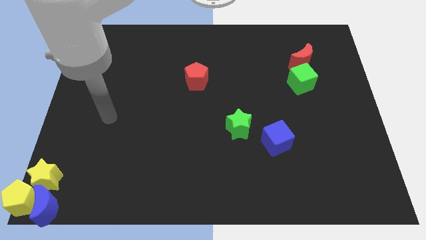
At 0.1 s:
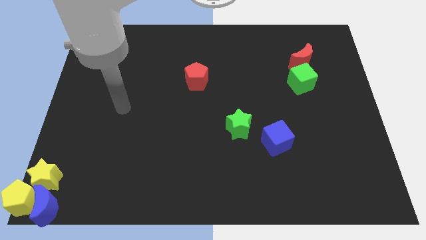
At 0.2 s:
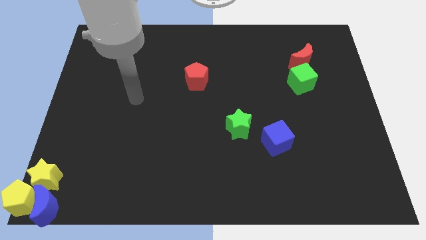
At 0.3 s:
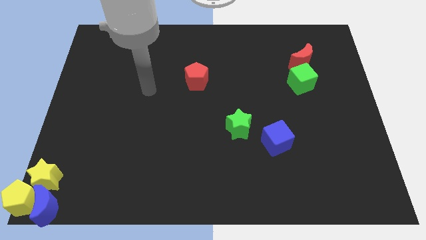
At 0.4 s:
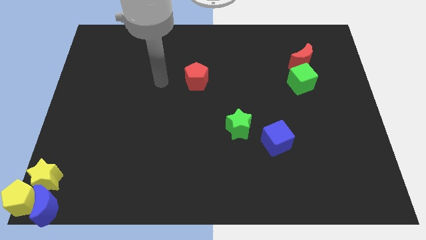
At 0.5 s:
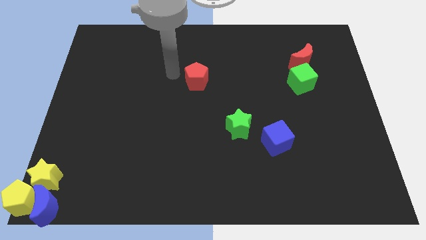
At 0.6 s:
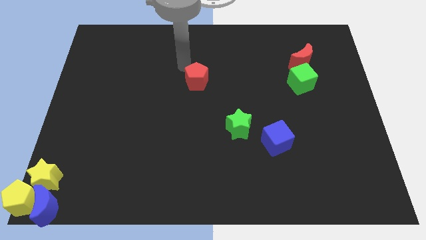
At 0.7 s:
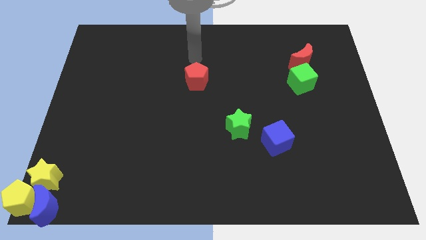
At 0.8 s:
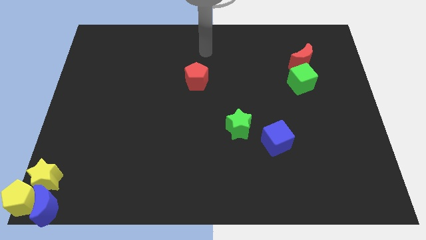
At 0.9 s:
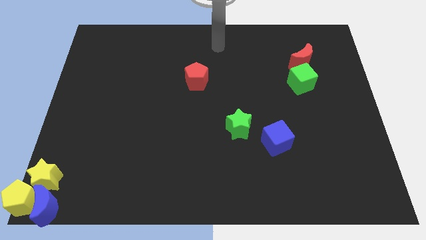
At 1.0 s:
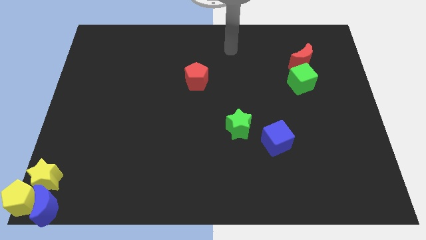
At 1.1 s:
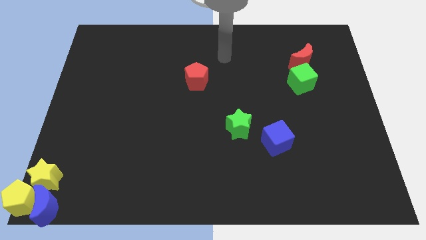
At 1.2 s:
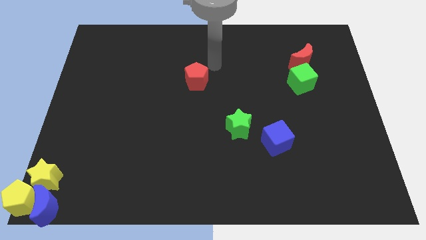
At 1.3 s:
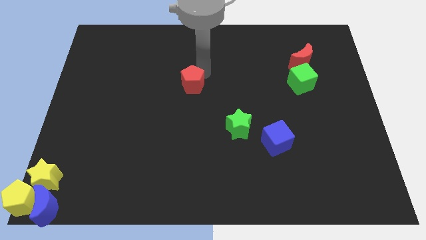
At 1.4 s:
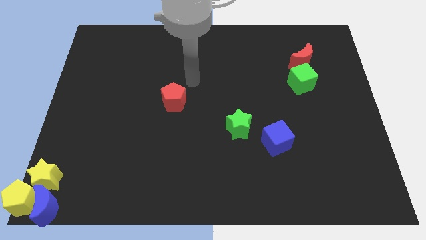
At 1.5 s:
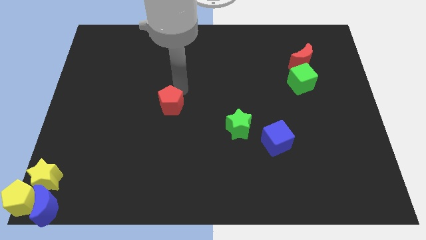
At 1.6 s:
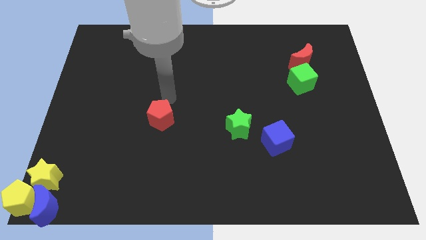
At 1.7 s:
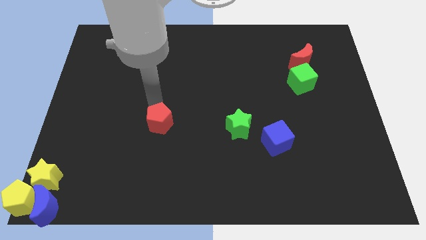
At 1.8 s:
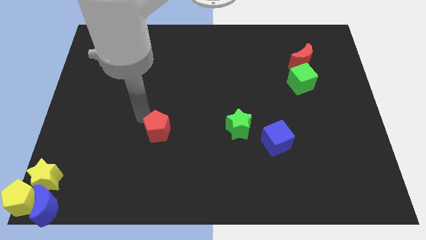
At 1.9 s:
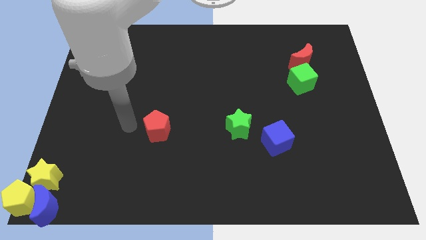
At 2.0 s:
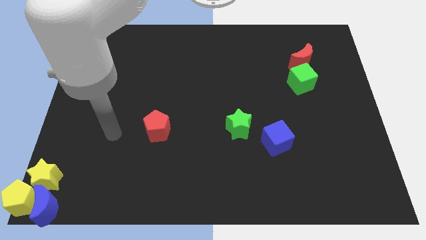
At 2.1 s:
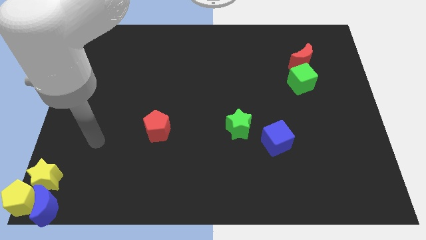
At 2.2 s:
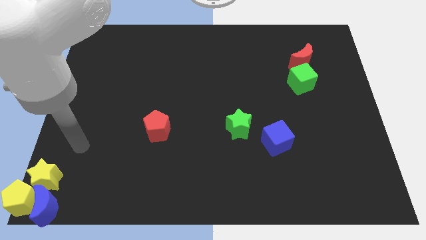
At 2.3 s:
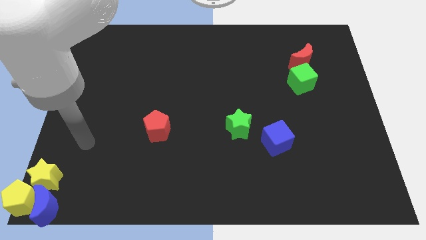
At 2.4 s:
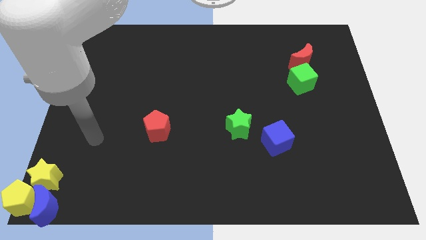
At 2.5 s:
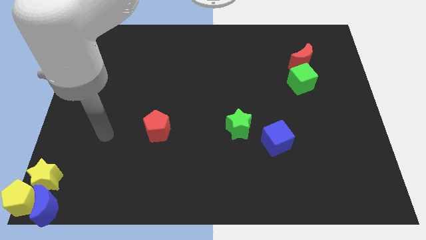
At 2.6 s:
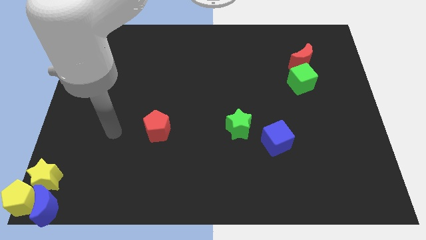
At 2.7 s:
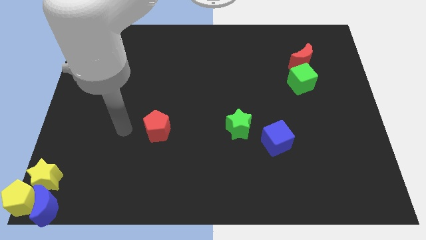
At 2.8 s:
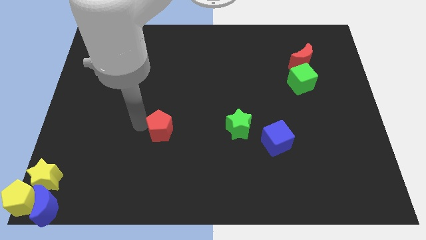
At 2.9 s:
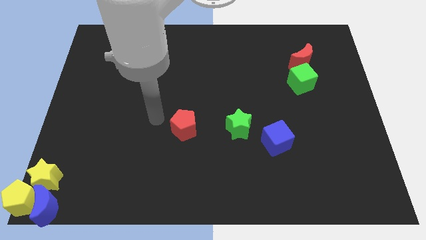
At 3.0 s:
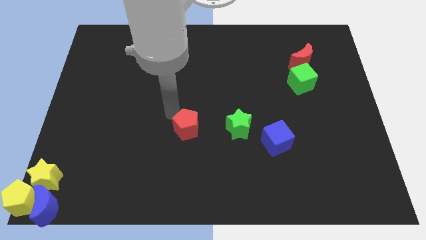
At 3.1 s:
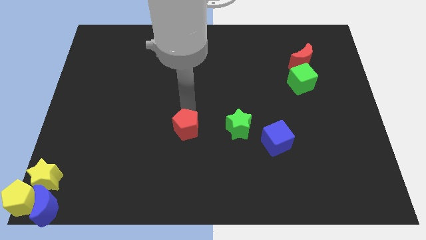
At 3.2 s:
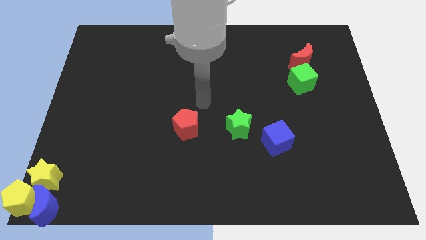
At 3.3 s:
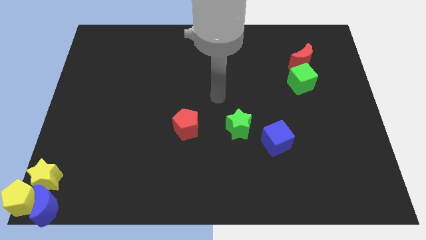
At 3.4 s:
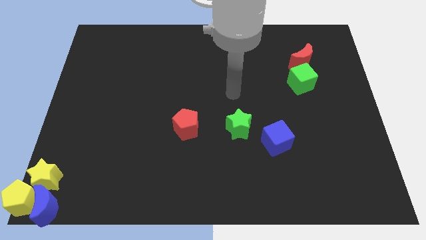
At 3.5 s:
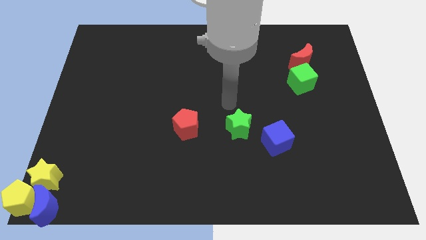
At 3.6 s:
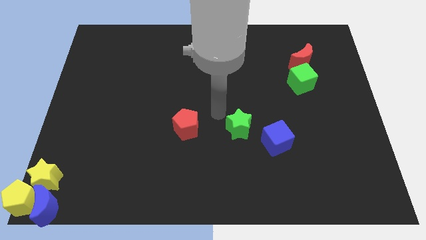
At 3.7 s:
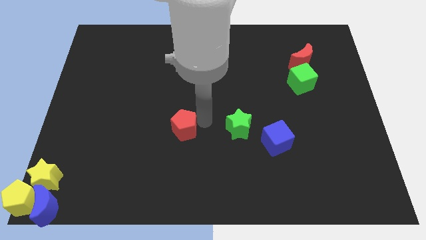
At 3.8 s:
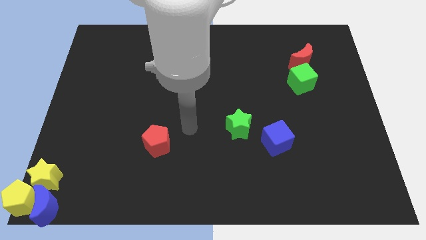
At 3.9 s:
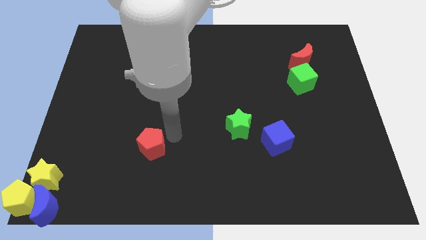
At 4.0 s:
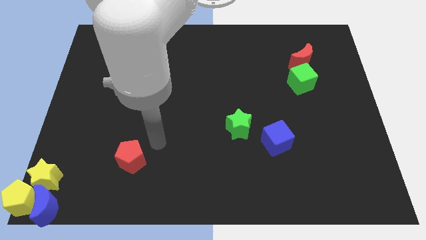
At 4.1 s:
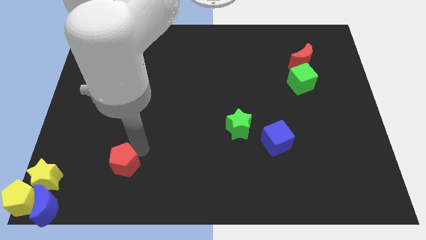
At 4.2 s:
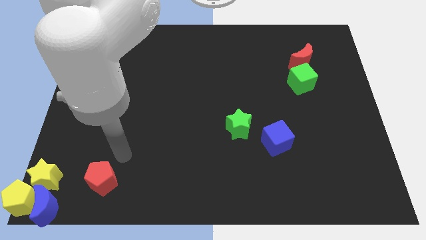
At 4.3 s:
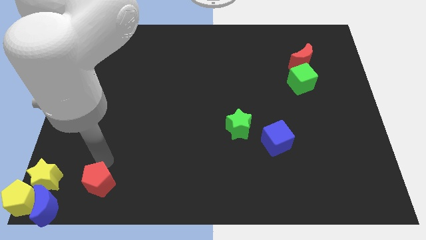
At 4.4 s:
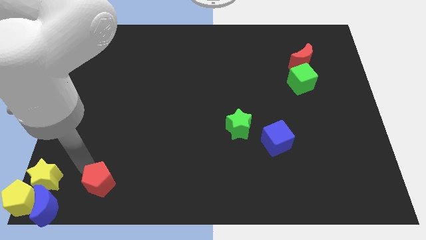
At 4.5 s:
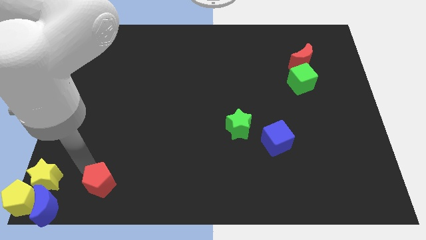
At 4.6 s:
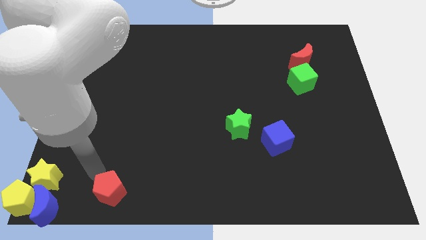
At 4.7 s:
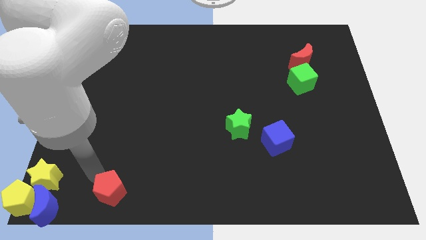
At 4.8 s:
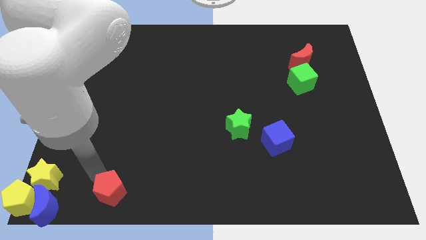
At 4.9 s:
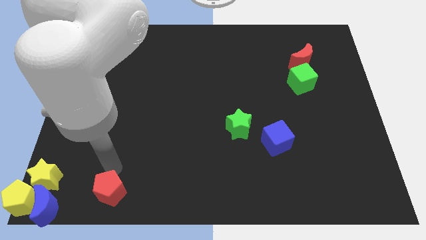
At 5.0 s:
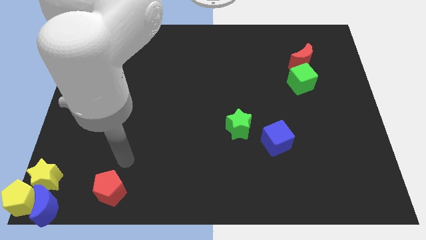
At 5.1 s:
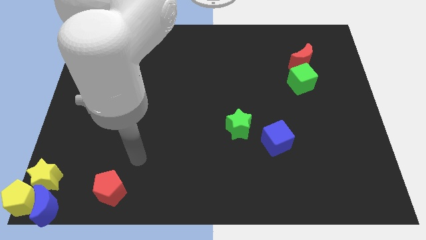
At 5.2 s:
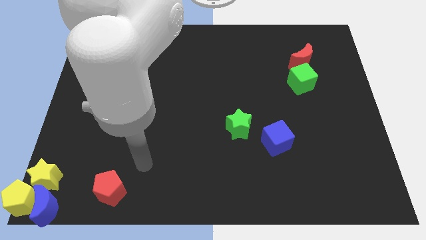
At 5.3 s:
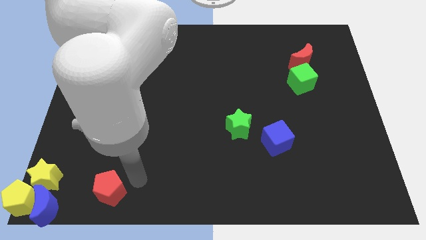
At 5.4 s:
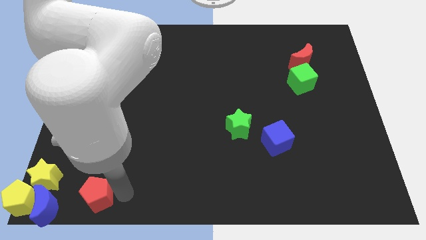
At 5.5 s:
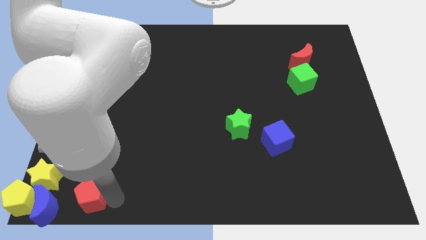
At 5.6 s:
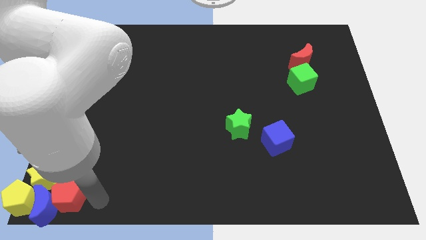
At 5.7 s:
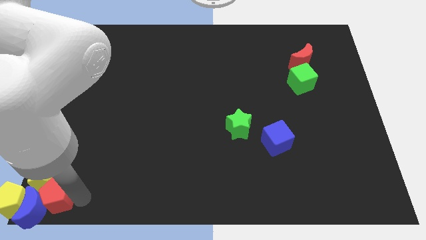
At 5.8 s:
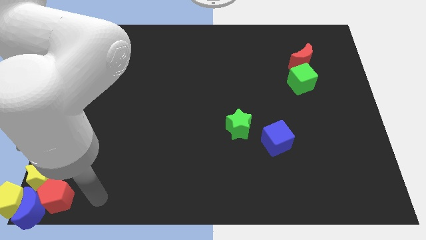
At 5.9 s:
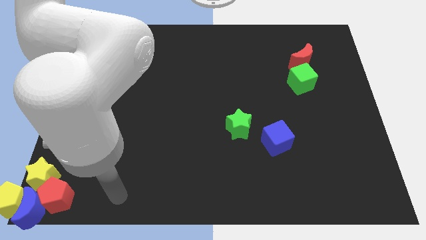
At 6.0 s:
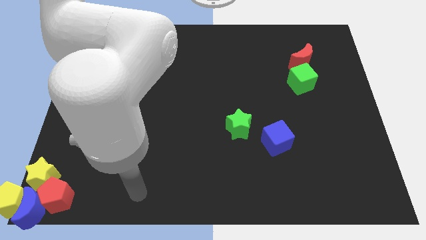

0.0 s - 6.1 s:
push the red pentagon into the blue crescent

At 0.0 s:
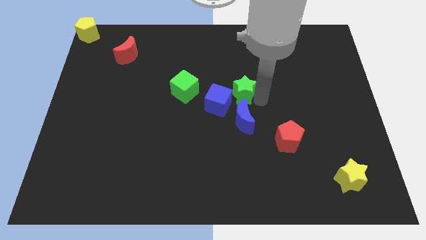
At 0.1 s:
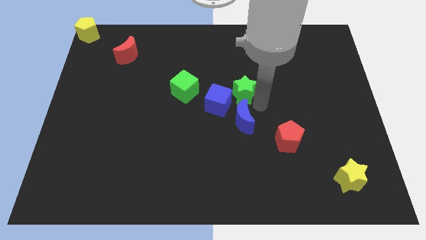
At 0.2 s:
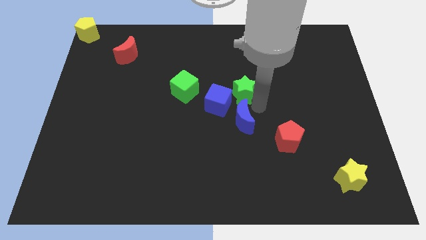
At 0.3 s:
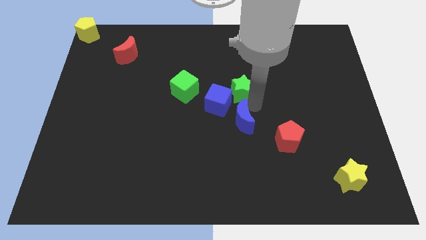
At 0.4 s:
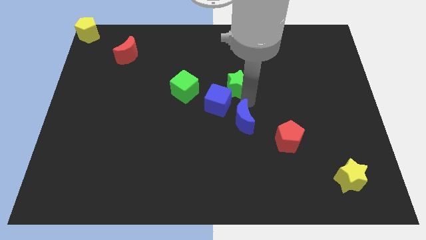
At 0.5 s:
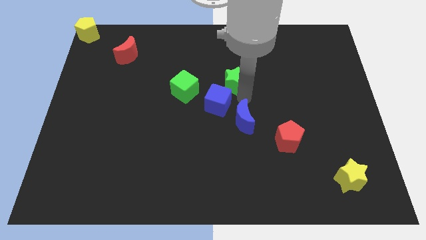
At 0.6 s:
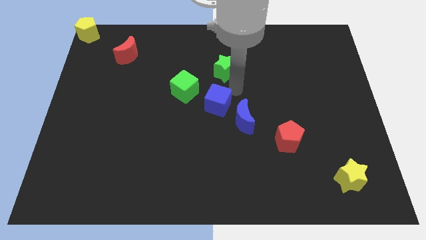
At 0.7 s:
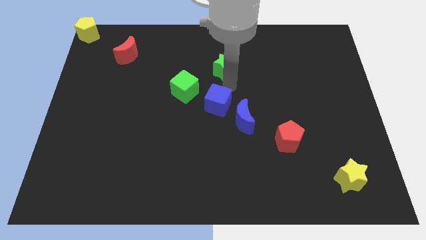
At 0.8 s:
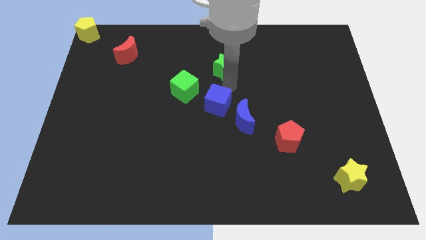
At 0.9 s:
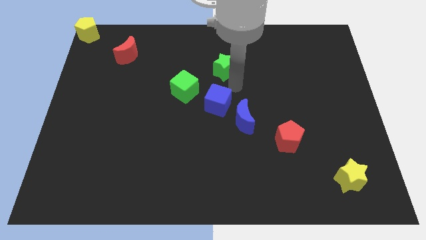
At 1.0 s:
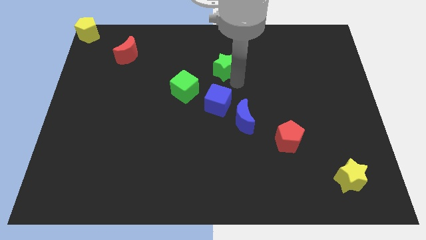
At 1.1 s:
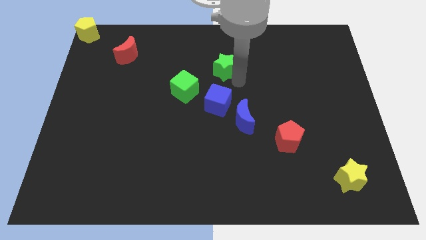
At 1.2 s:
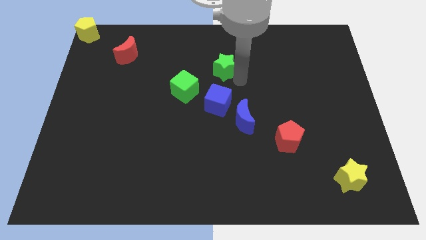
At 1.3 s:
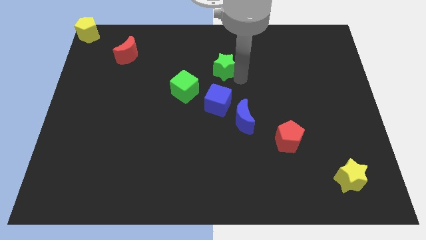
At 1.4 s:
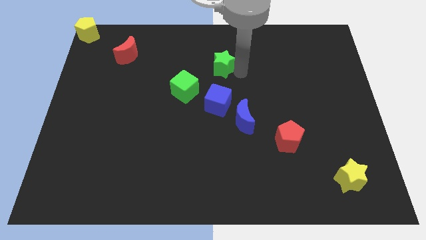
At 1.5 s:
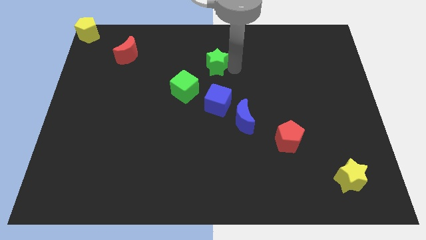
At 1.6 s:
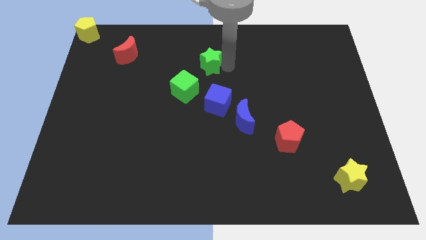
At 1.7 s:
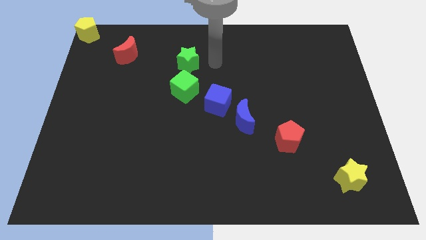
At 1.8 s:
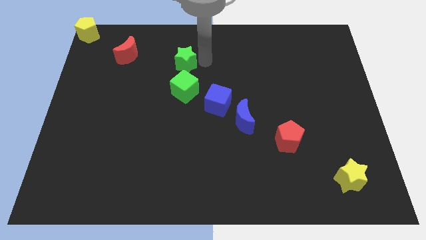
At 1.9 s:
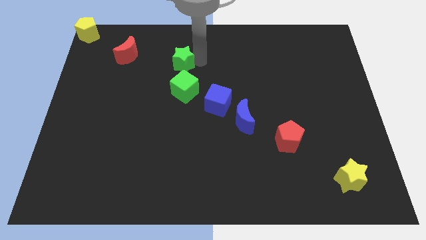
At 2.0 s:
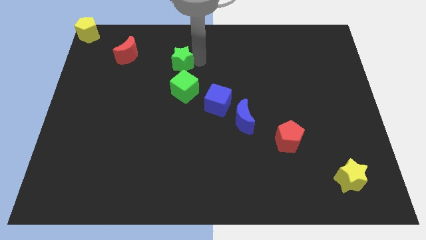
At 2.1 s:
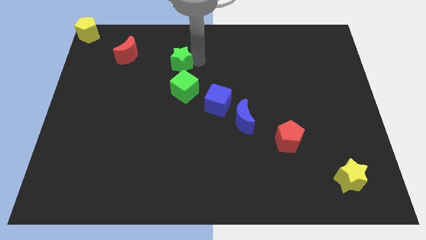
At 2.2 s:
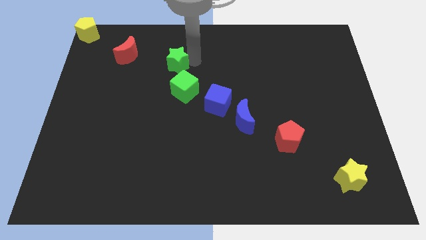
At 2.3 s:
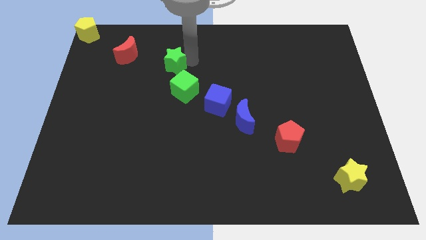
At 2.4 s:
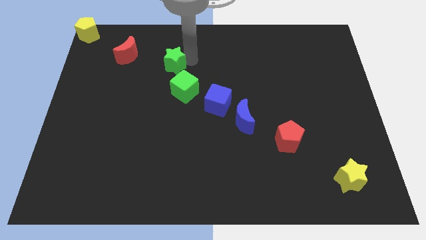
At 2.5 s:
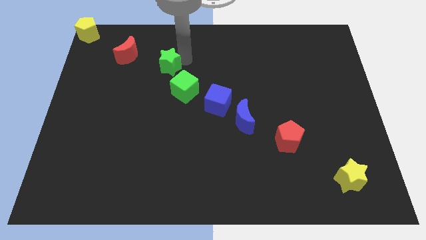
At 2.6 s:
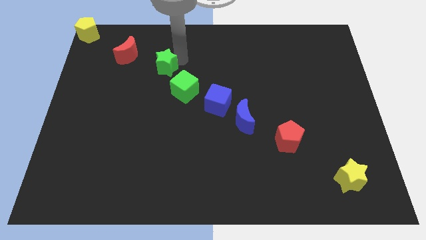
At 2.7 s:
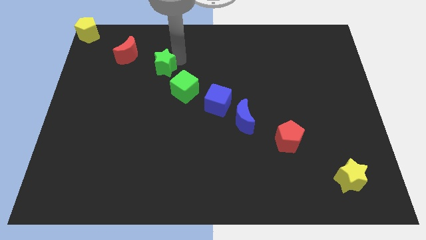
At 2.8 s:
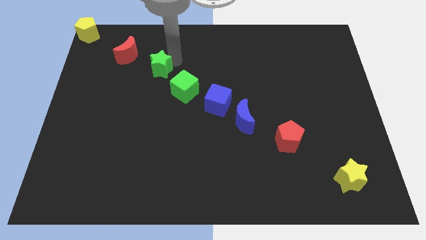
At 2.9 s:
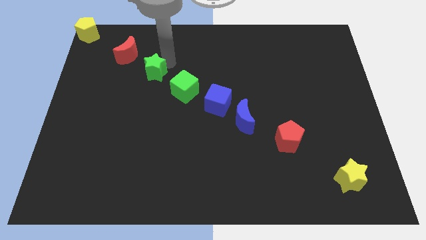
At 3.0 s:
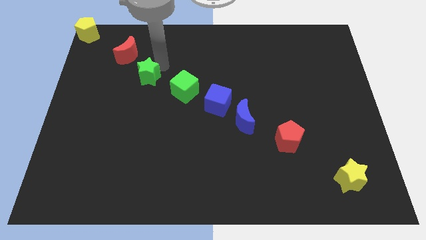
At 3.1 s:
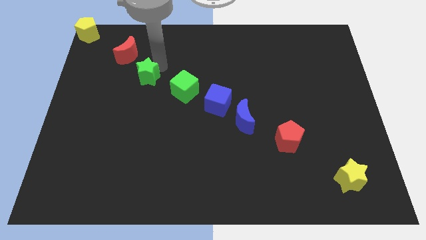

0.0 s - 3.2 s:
place the green star between the red moon and green cube
